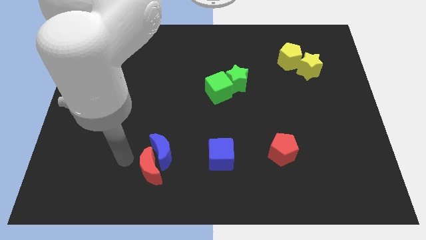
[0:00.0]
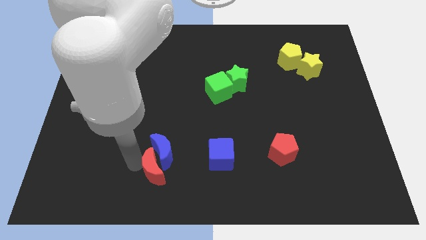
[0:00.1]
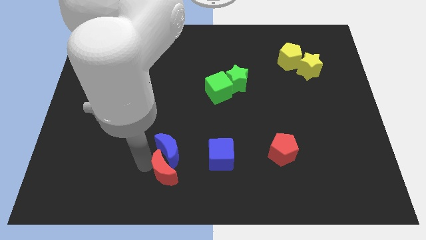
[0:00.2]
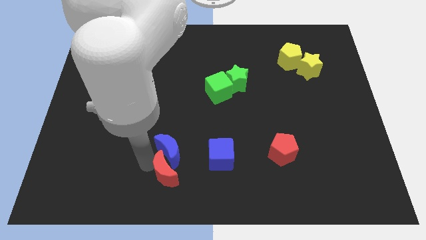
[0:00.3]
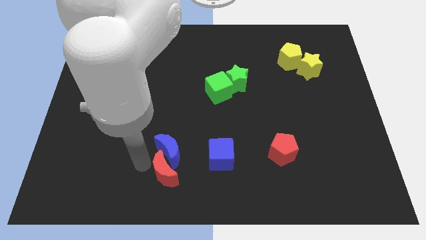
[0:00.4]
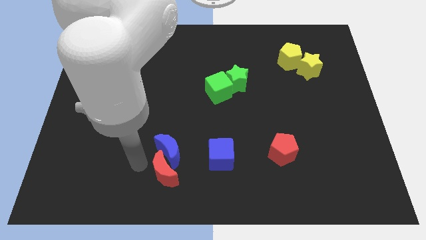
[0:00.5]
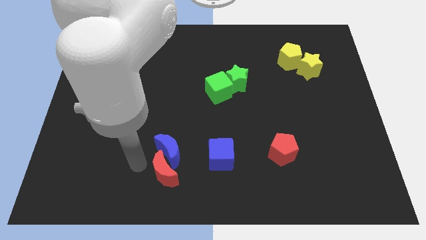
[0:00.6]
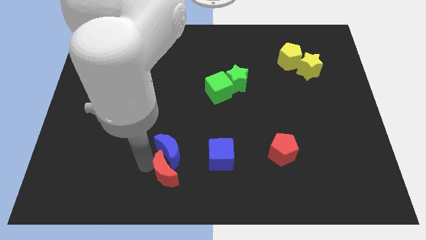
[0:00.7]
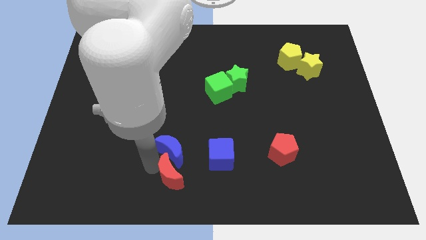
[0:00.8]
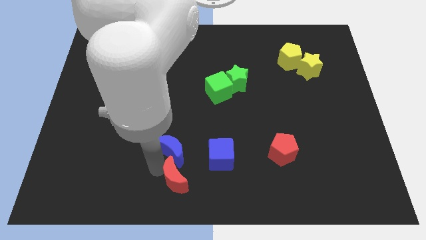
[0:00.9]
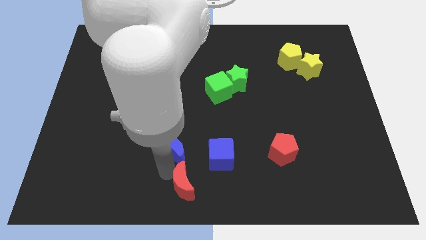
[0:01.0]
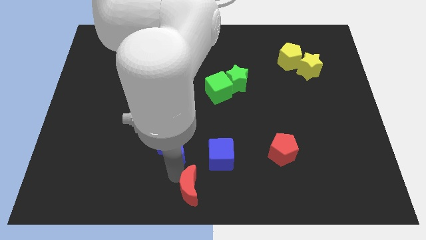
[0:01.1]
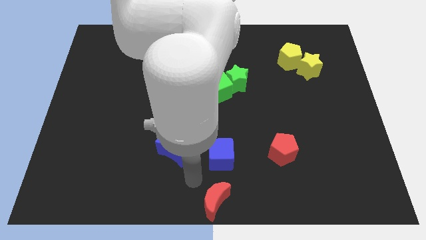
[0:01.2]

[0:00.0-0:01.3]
separate the red moon from blue moon

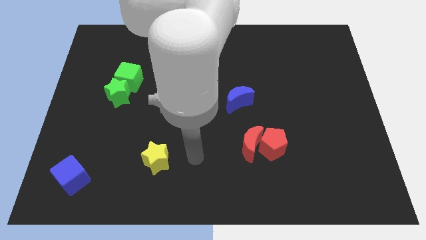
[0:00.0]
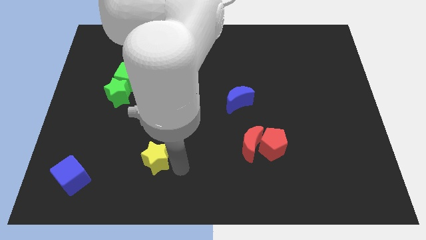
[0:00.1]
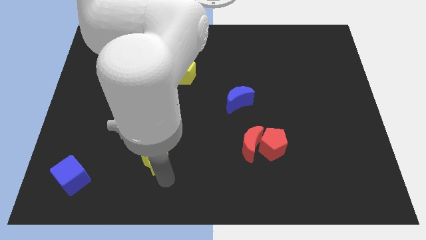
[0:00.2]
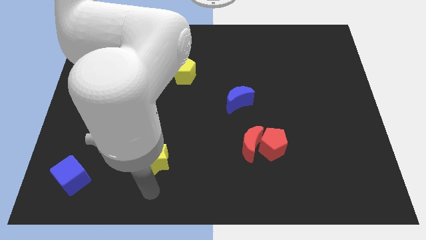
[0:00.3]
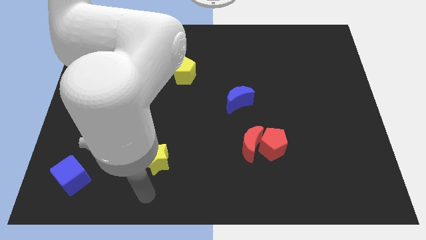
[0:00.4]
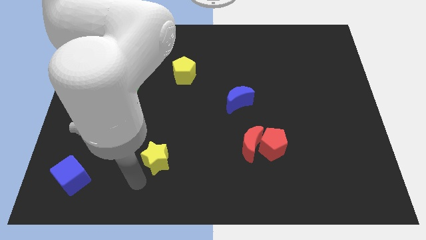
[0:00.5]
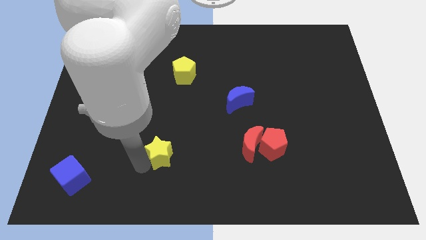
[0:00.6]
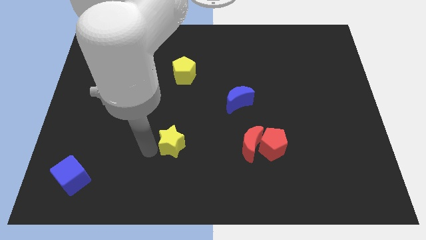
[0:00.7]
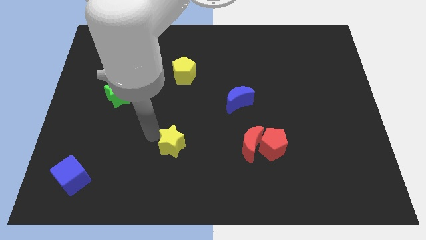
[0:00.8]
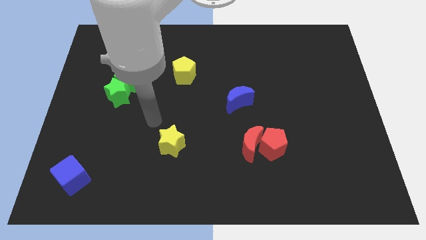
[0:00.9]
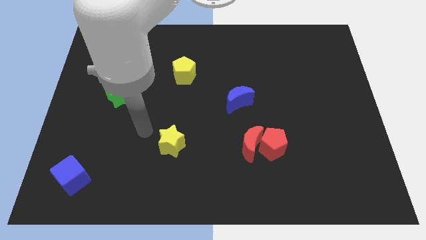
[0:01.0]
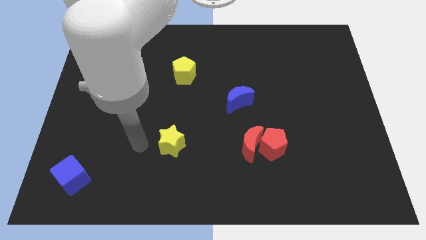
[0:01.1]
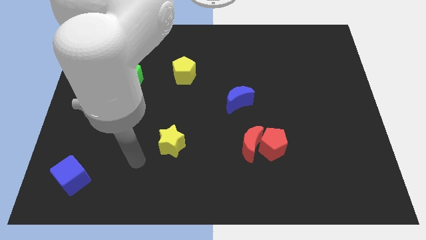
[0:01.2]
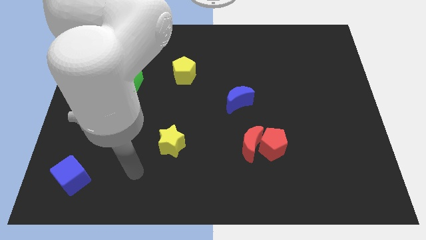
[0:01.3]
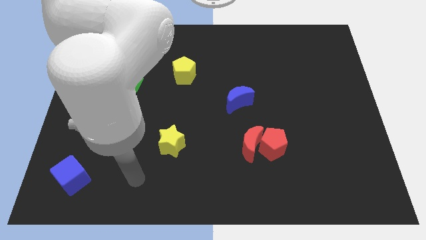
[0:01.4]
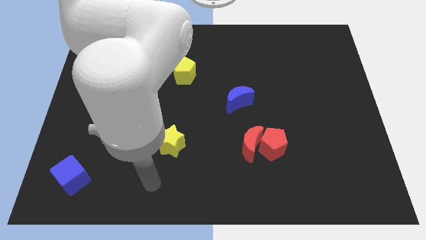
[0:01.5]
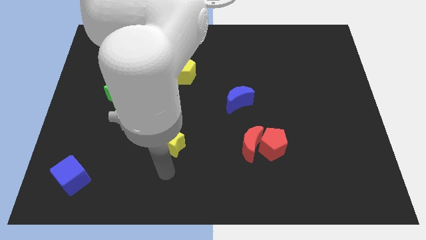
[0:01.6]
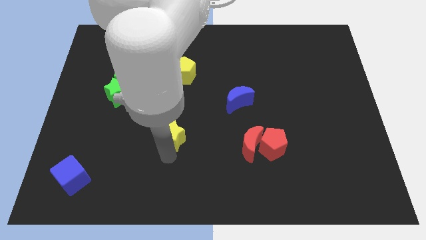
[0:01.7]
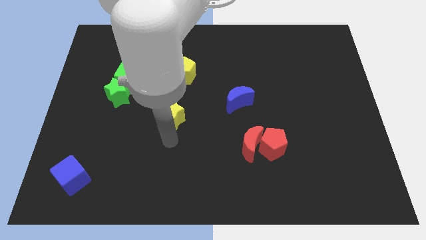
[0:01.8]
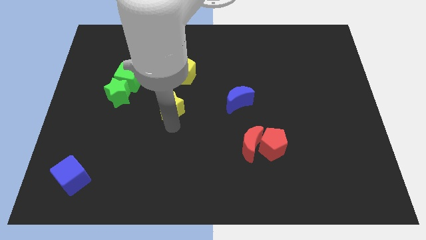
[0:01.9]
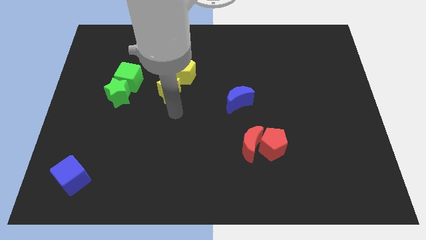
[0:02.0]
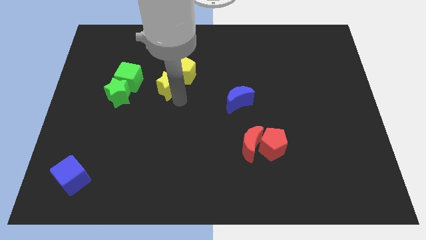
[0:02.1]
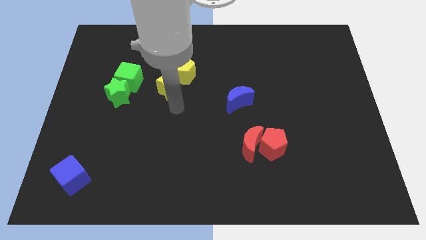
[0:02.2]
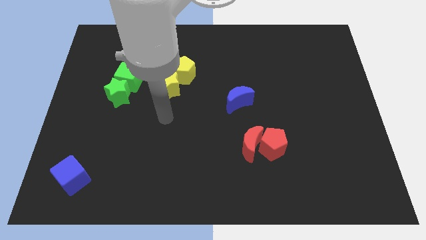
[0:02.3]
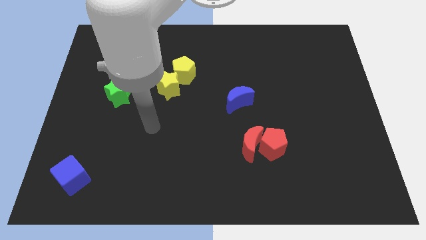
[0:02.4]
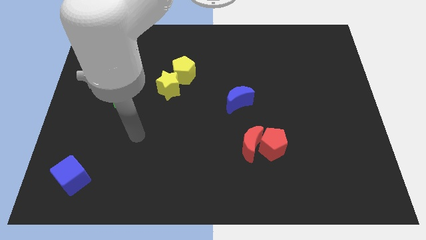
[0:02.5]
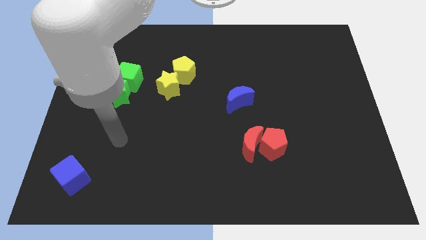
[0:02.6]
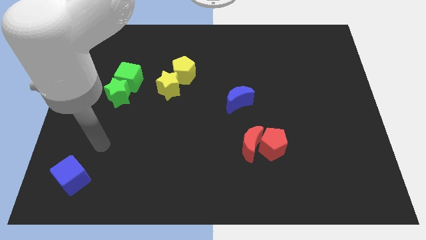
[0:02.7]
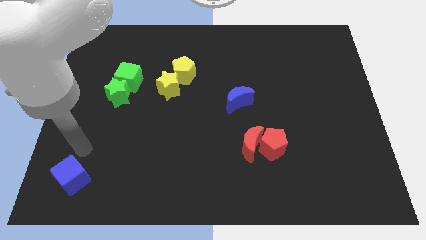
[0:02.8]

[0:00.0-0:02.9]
move the yellow star to the center of the board

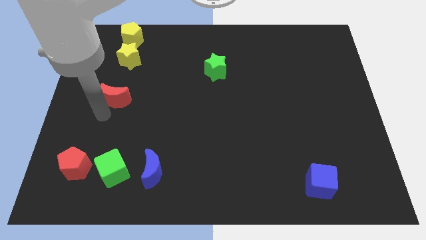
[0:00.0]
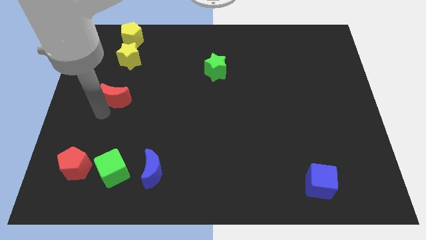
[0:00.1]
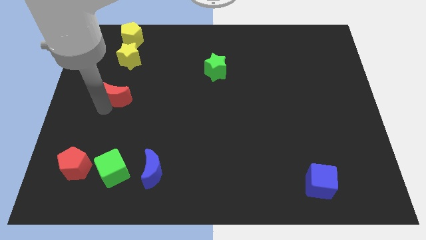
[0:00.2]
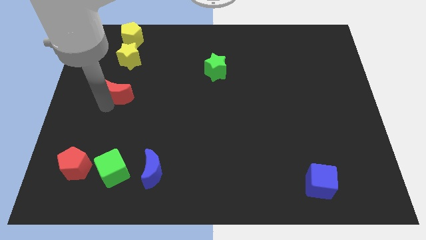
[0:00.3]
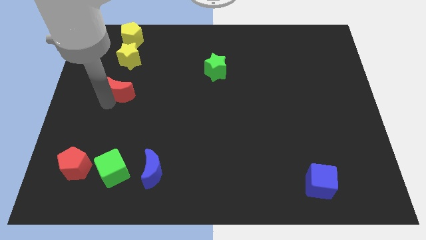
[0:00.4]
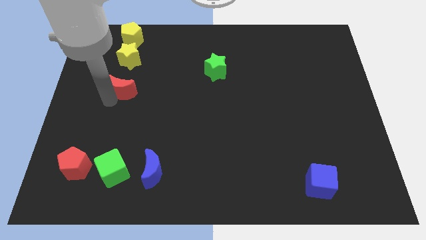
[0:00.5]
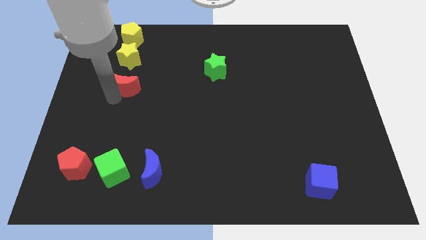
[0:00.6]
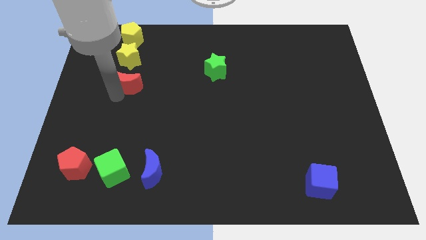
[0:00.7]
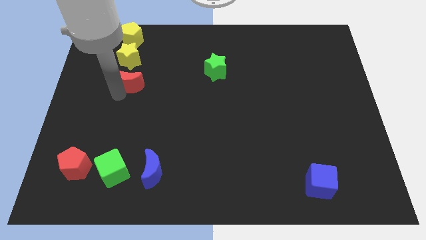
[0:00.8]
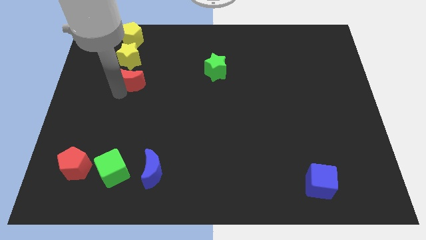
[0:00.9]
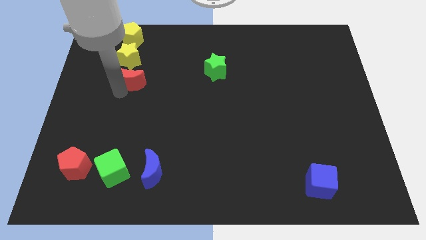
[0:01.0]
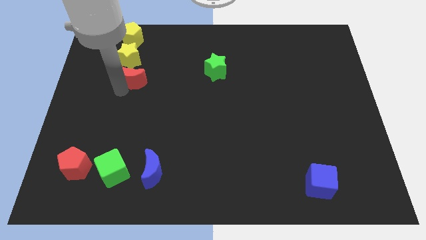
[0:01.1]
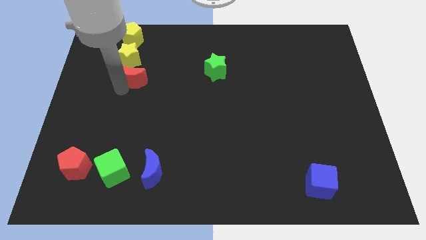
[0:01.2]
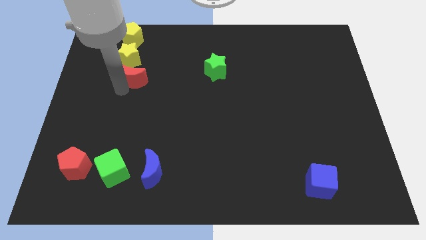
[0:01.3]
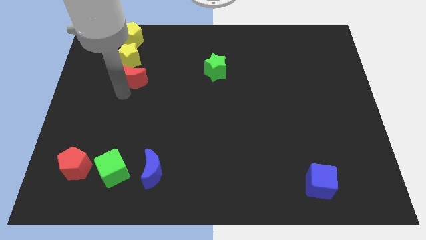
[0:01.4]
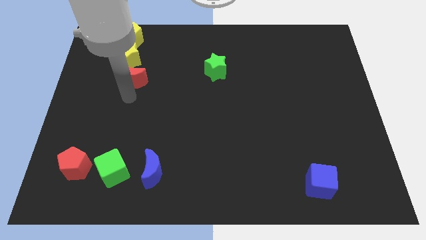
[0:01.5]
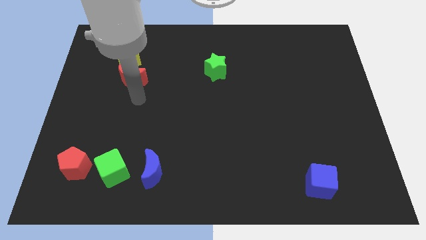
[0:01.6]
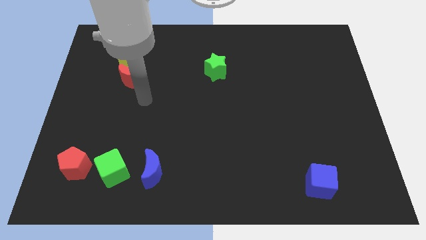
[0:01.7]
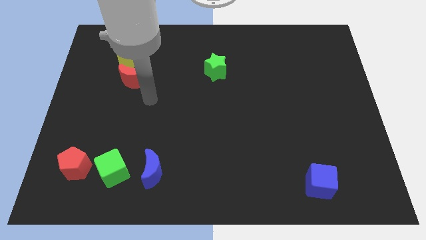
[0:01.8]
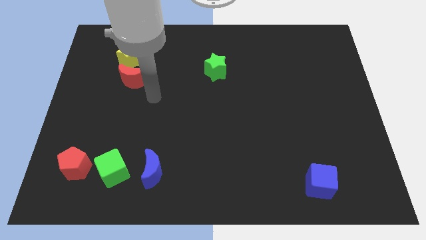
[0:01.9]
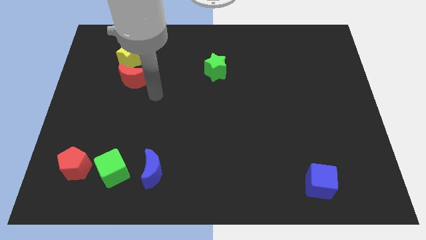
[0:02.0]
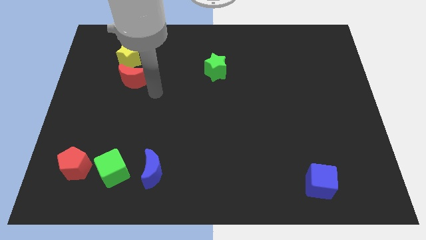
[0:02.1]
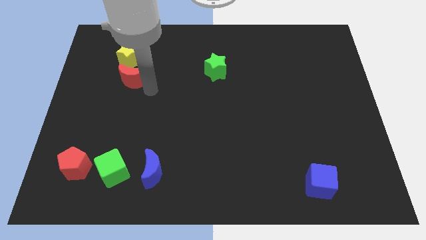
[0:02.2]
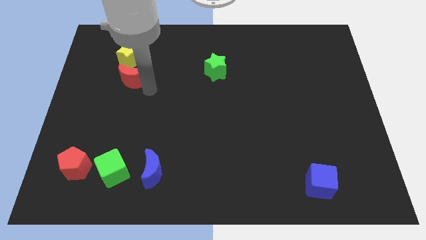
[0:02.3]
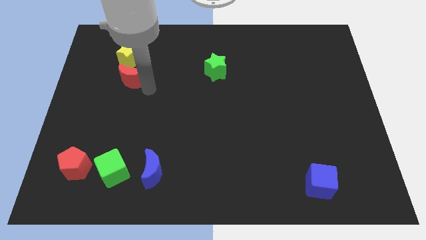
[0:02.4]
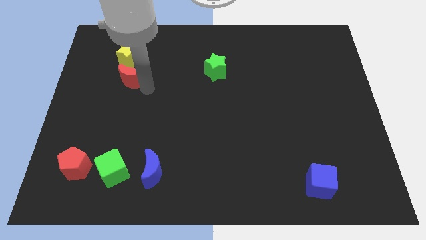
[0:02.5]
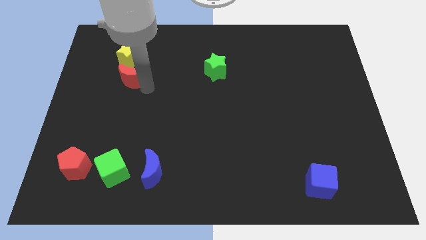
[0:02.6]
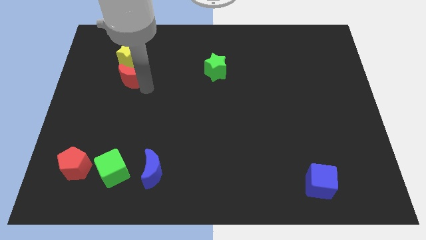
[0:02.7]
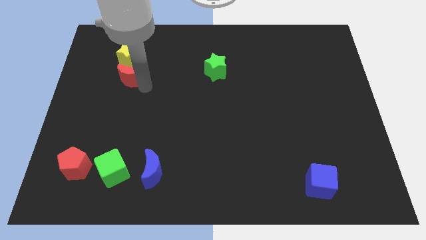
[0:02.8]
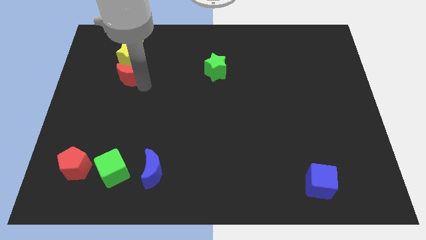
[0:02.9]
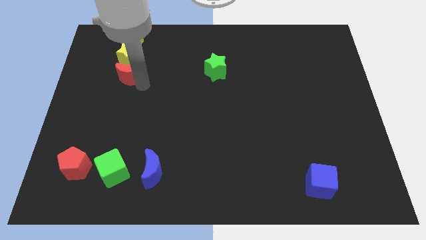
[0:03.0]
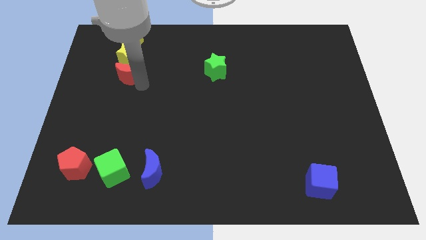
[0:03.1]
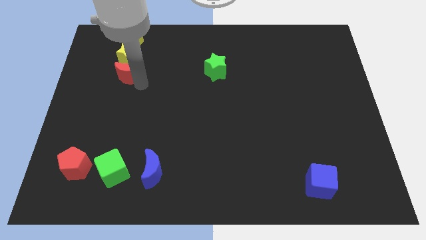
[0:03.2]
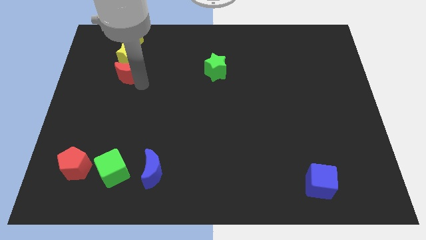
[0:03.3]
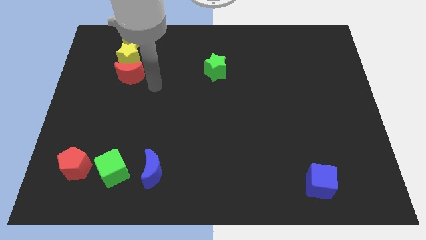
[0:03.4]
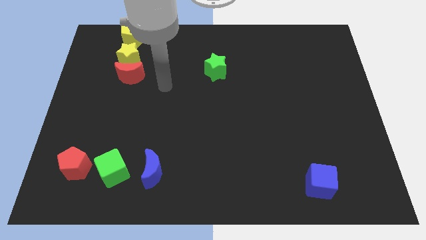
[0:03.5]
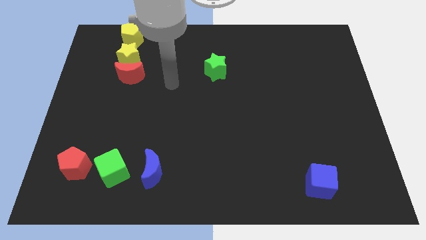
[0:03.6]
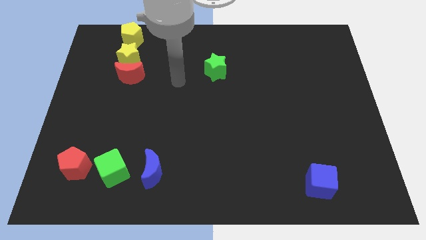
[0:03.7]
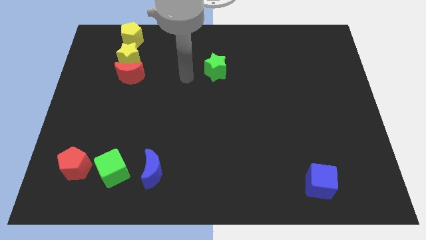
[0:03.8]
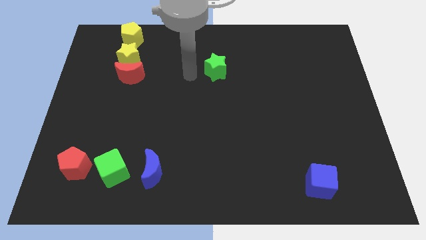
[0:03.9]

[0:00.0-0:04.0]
move red moon into yellow star

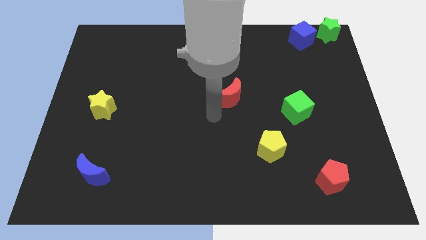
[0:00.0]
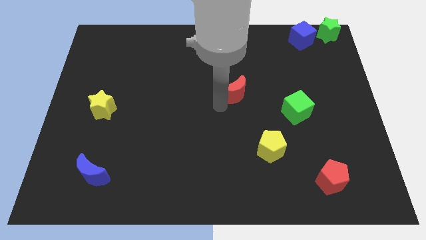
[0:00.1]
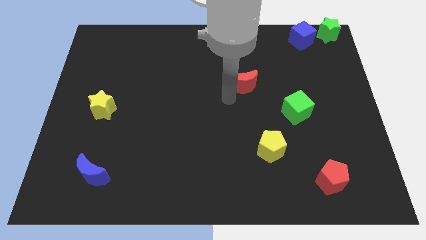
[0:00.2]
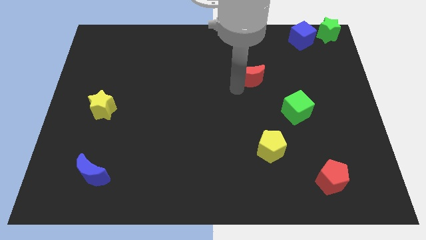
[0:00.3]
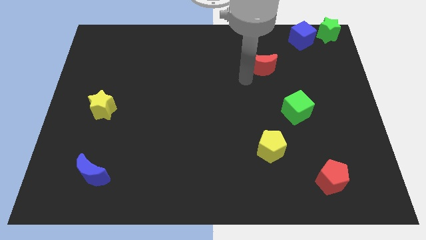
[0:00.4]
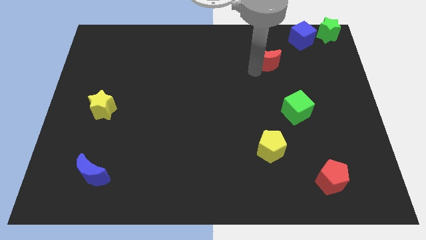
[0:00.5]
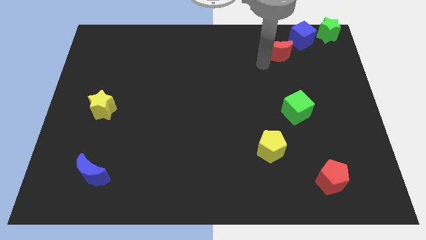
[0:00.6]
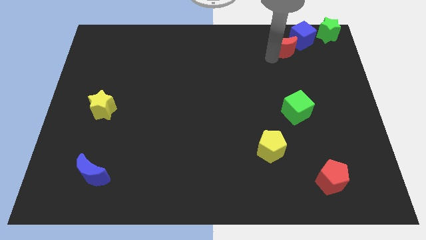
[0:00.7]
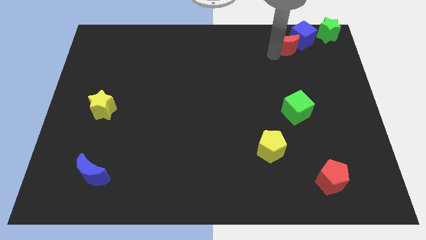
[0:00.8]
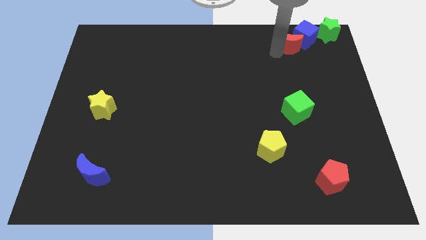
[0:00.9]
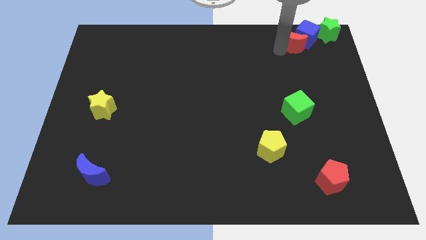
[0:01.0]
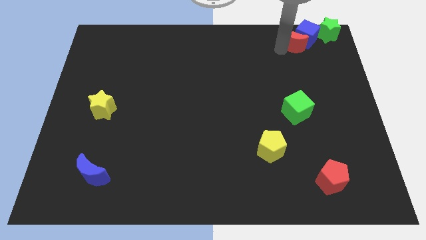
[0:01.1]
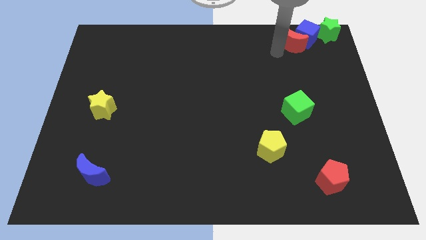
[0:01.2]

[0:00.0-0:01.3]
move the red crescent to the left of the blue cube
